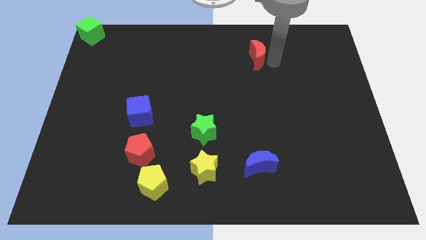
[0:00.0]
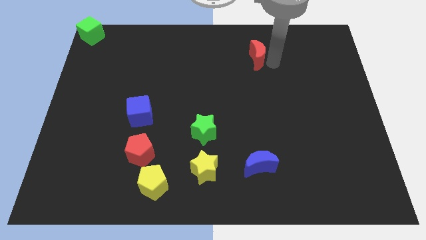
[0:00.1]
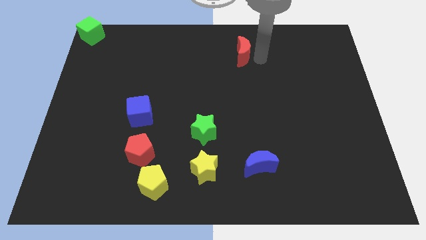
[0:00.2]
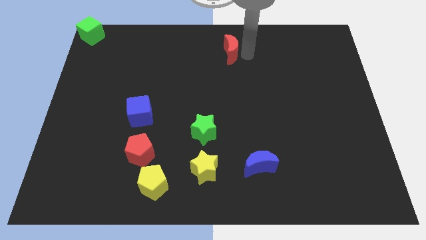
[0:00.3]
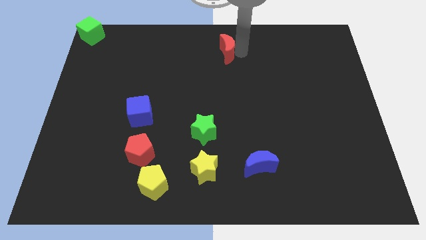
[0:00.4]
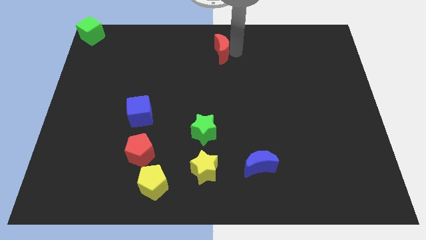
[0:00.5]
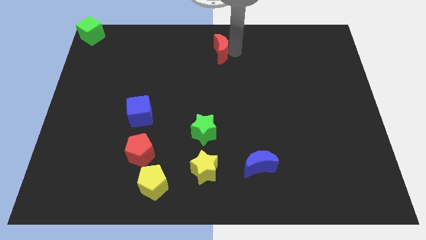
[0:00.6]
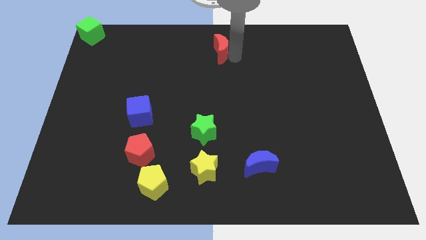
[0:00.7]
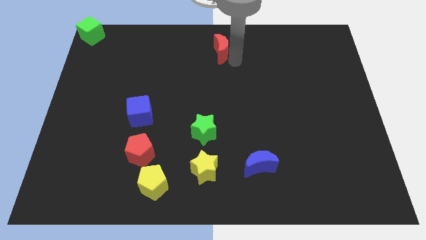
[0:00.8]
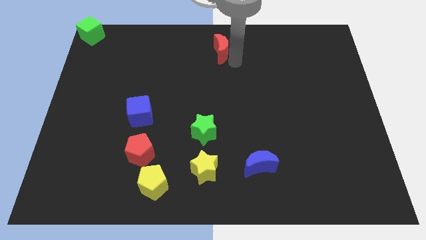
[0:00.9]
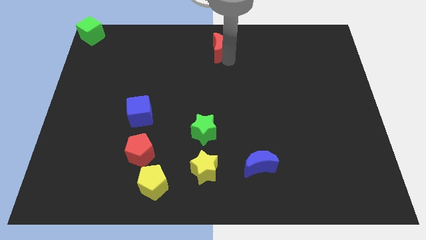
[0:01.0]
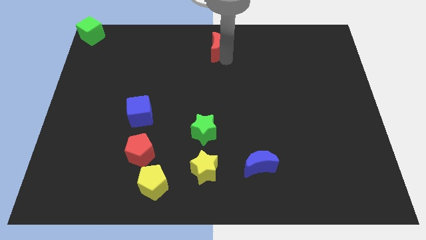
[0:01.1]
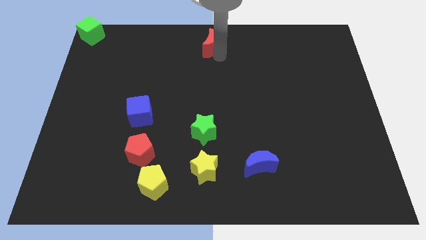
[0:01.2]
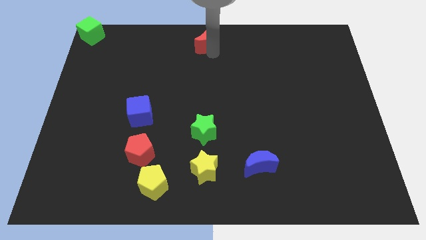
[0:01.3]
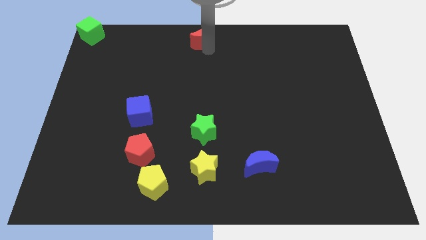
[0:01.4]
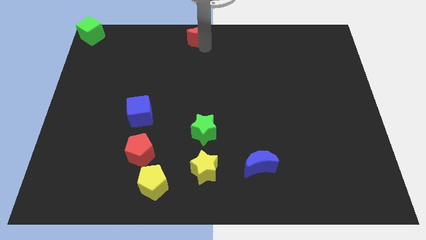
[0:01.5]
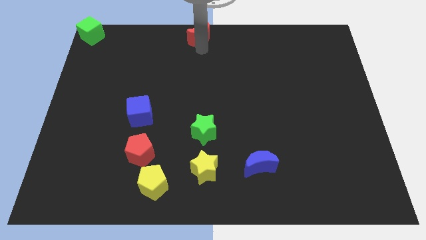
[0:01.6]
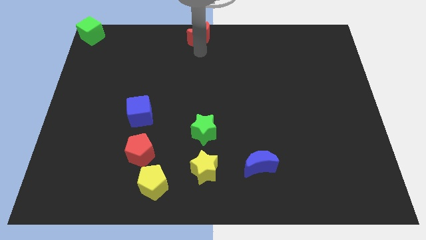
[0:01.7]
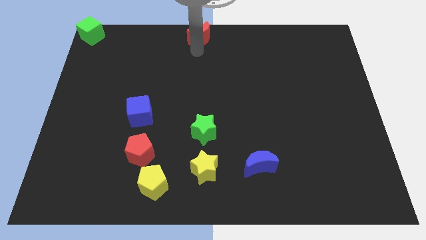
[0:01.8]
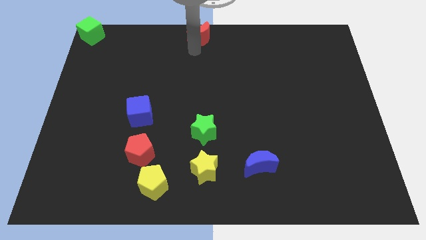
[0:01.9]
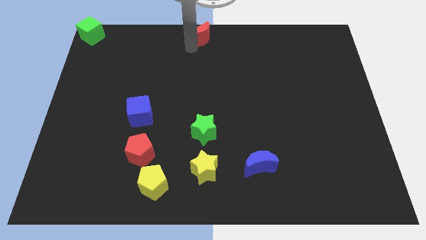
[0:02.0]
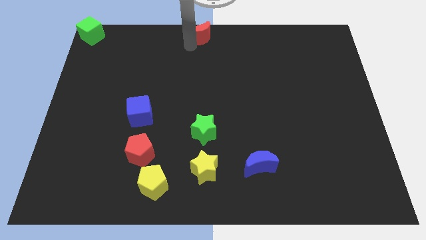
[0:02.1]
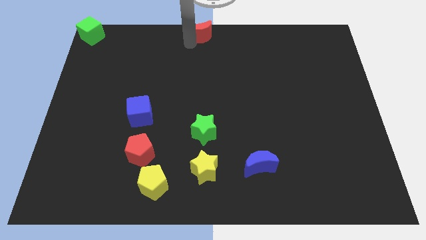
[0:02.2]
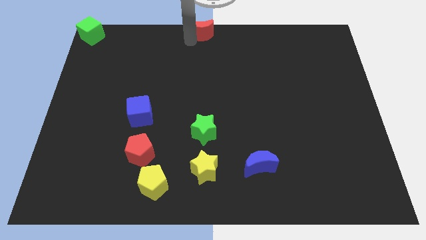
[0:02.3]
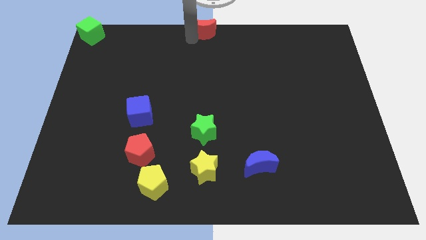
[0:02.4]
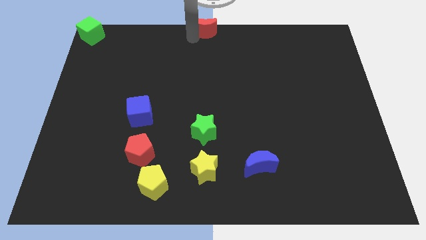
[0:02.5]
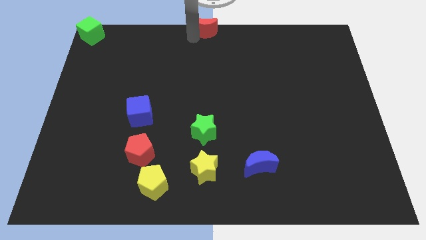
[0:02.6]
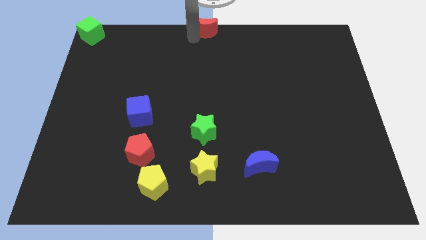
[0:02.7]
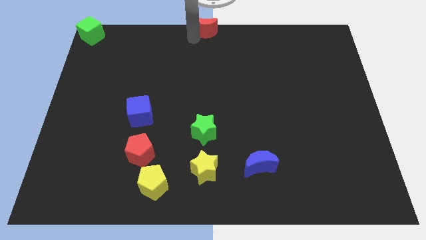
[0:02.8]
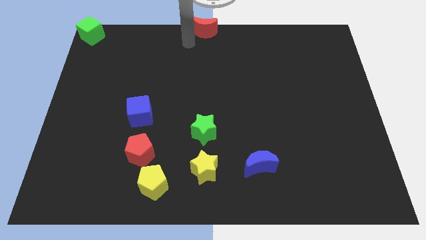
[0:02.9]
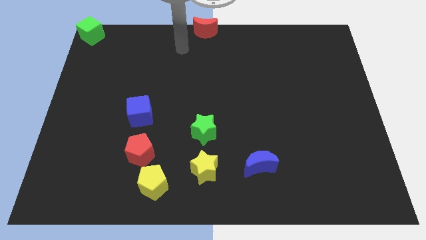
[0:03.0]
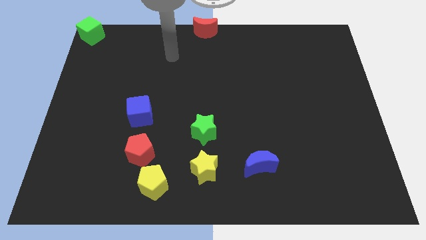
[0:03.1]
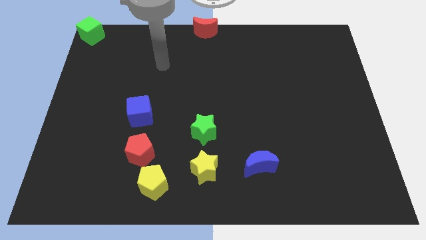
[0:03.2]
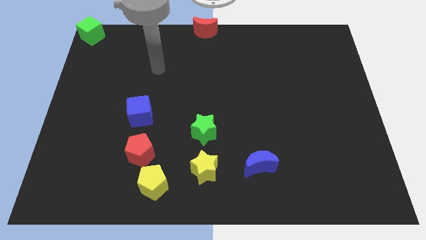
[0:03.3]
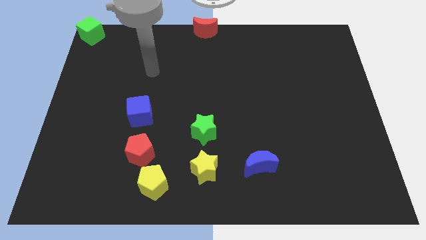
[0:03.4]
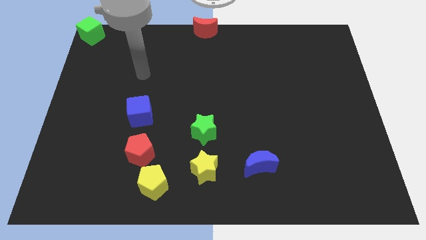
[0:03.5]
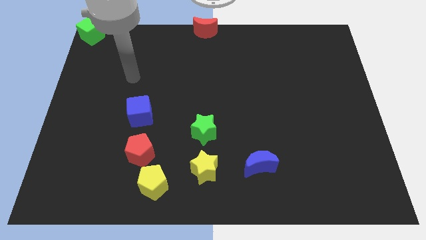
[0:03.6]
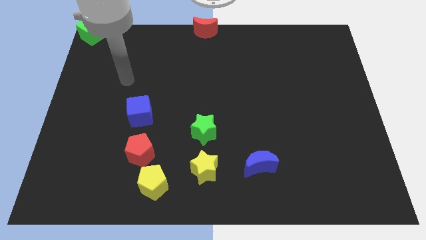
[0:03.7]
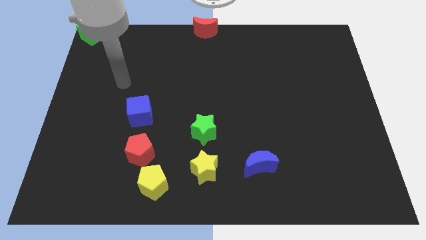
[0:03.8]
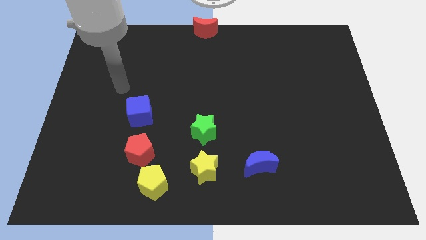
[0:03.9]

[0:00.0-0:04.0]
place the red moon vertically above the green star

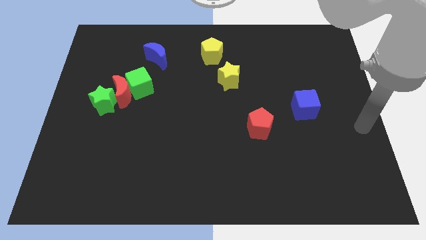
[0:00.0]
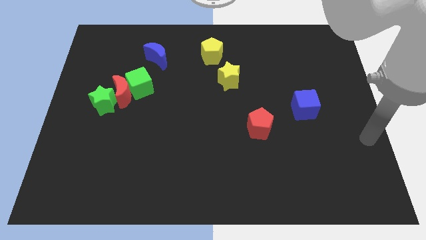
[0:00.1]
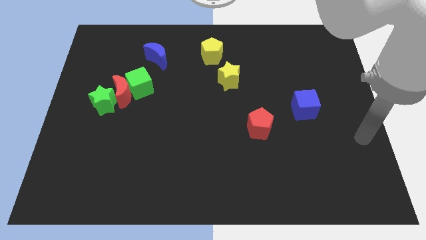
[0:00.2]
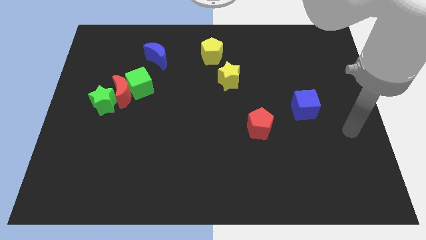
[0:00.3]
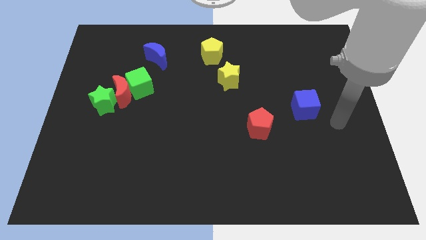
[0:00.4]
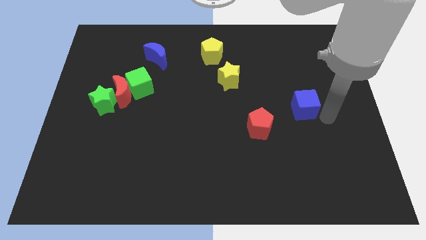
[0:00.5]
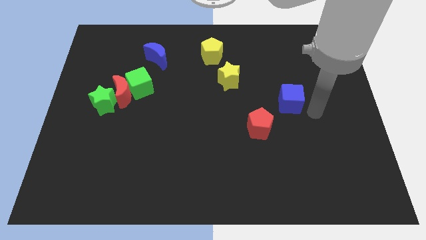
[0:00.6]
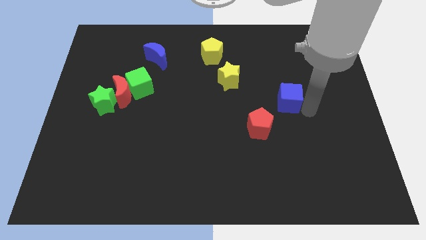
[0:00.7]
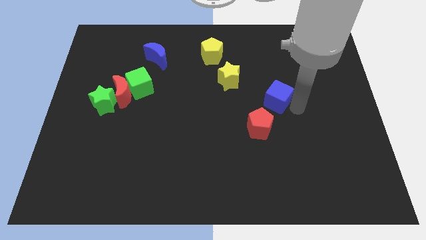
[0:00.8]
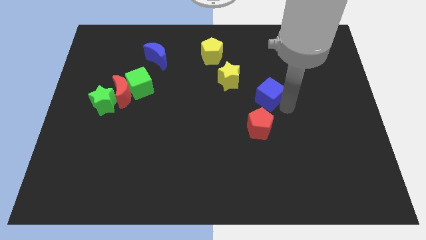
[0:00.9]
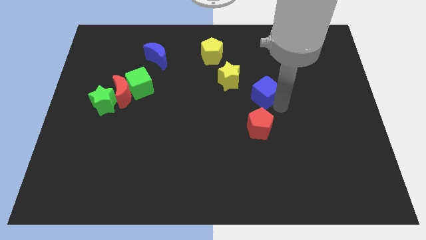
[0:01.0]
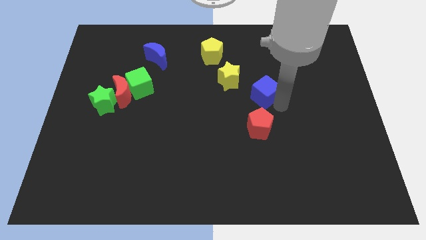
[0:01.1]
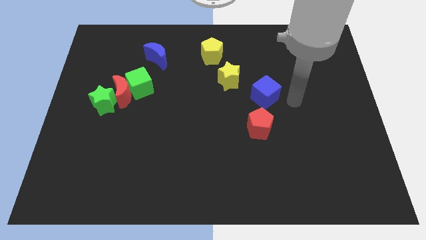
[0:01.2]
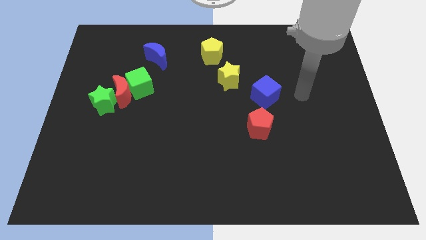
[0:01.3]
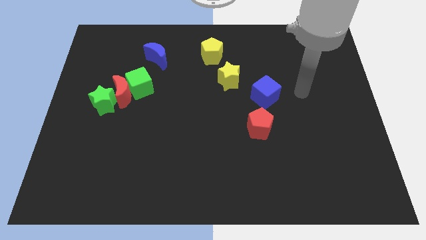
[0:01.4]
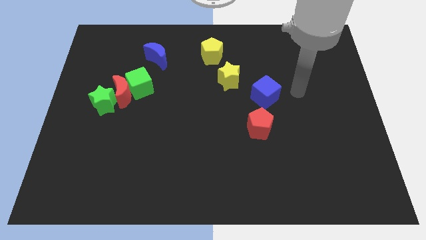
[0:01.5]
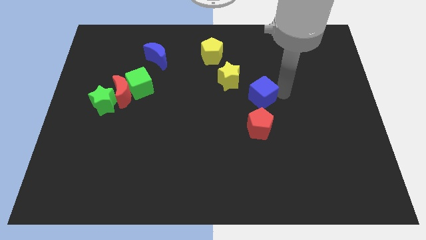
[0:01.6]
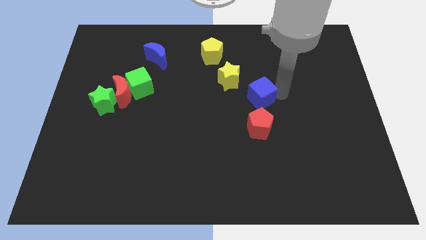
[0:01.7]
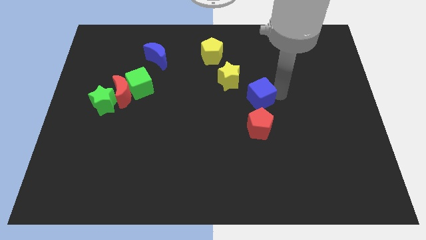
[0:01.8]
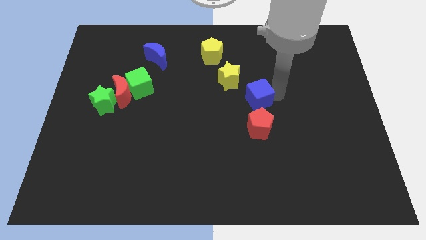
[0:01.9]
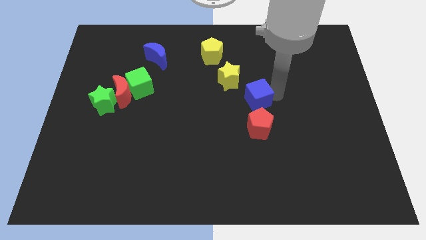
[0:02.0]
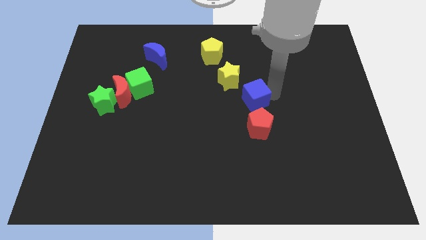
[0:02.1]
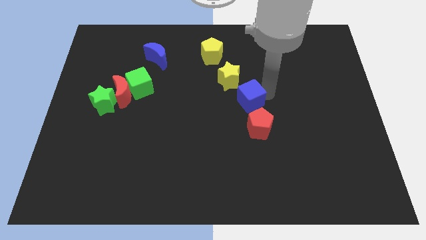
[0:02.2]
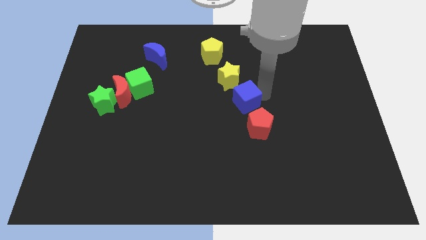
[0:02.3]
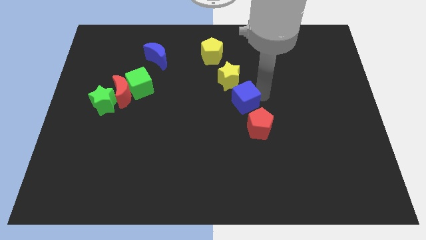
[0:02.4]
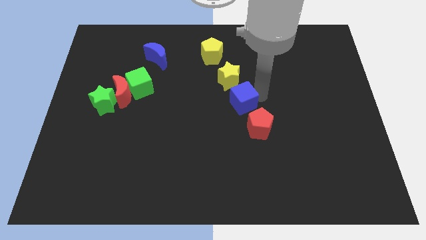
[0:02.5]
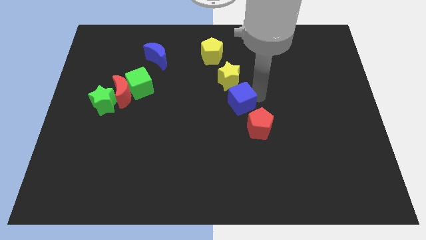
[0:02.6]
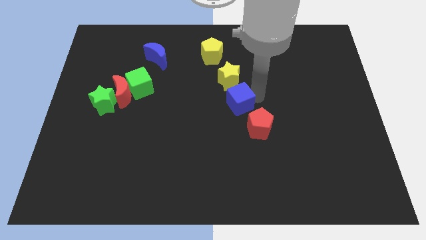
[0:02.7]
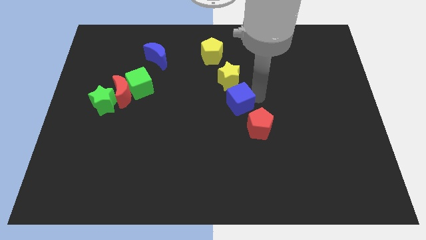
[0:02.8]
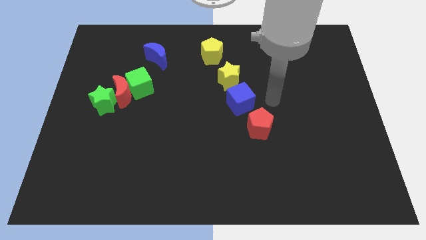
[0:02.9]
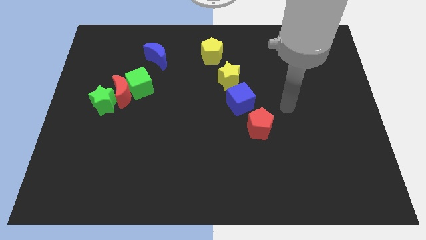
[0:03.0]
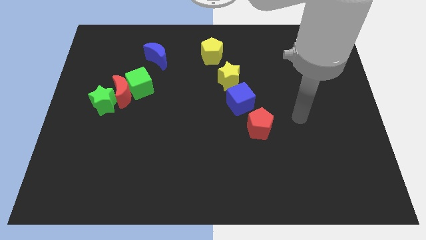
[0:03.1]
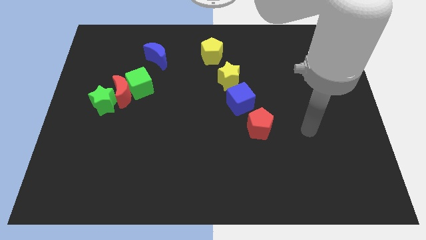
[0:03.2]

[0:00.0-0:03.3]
move the blue cube between the yellow star and red pentagon

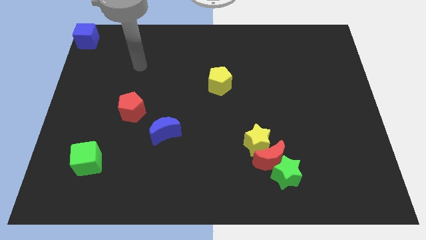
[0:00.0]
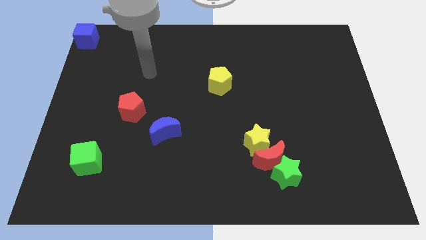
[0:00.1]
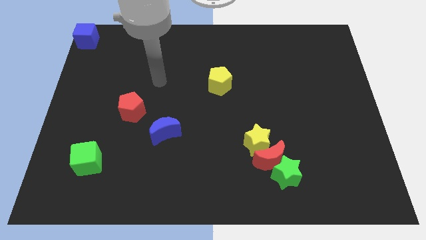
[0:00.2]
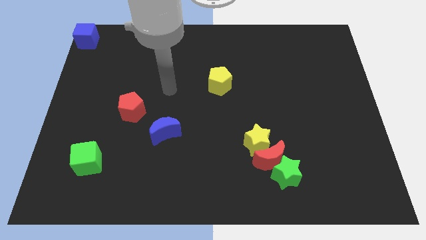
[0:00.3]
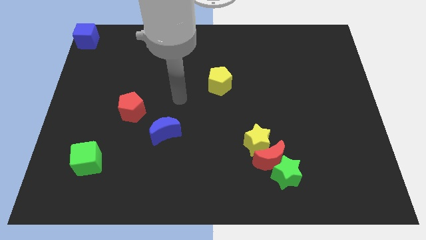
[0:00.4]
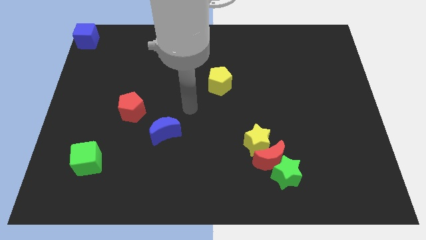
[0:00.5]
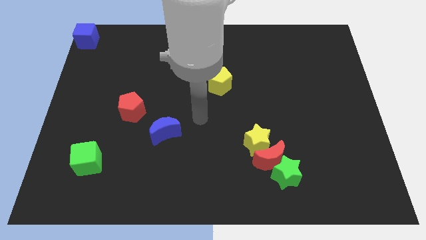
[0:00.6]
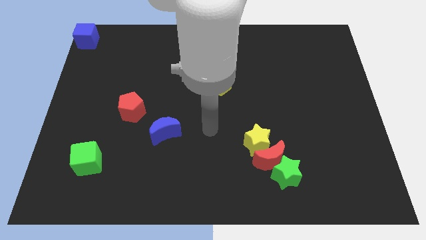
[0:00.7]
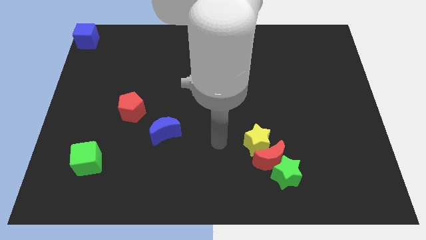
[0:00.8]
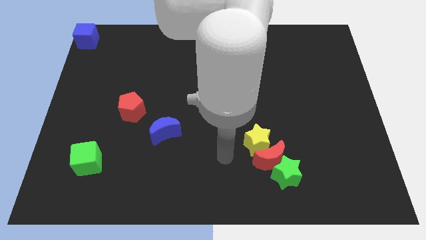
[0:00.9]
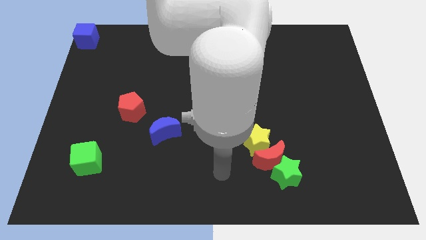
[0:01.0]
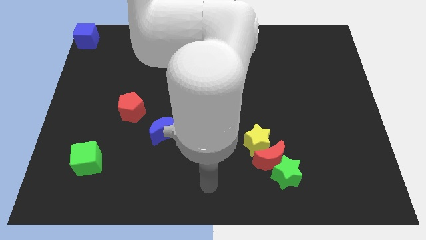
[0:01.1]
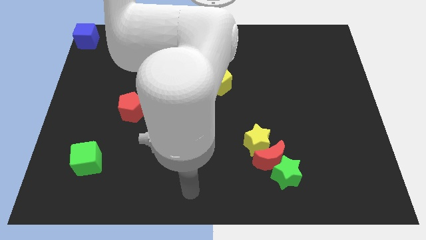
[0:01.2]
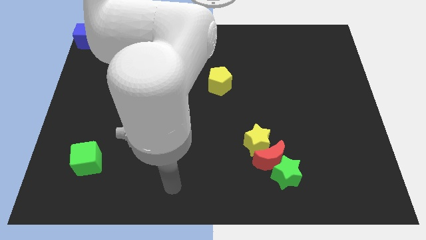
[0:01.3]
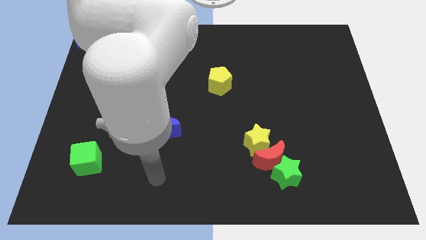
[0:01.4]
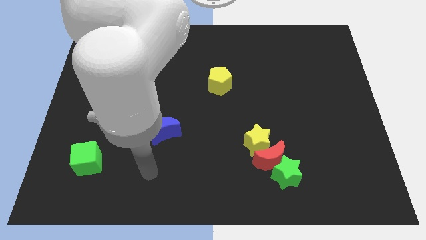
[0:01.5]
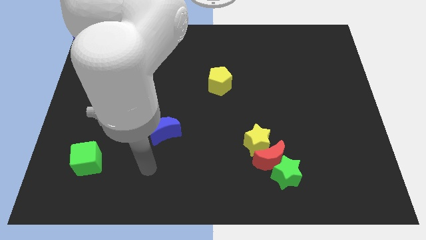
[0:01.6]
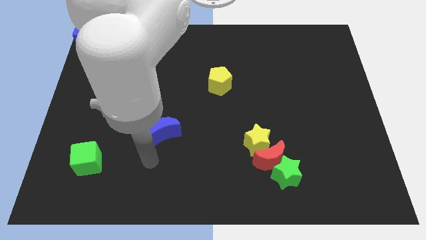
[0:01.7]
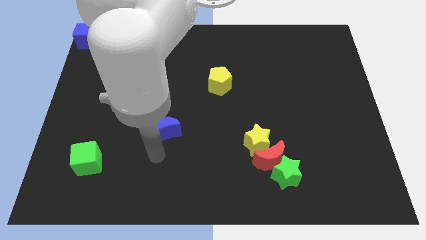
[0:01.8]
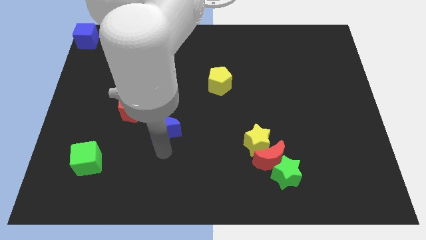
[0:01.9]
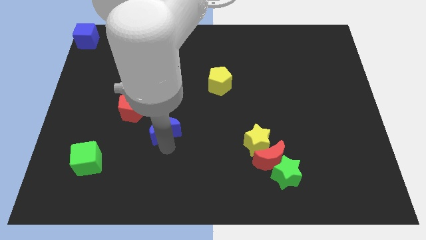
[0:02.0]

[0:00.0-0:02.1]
move your arm close to the blue moon
